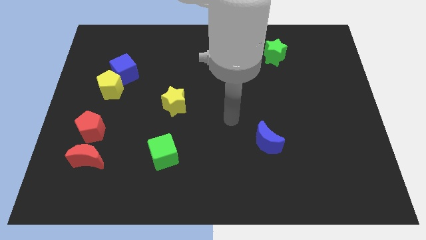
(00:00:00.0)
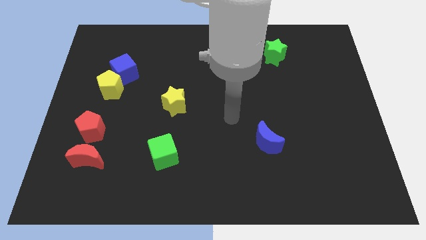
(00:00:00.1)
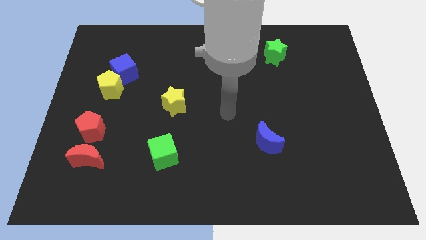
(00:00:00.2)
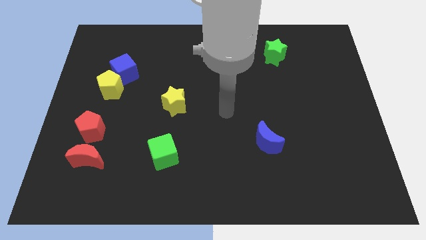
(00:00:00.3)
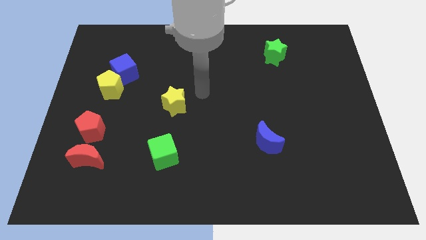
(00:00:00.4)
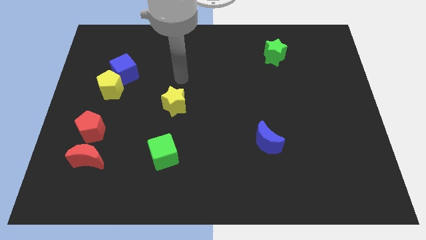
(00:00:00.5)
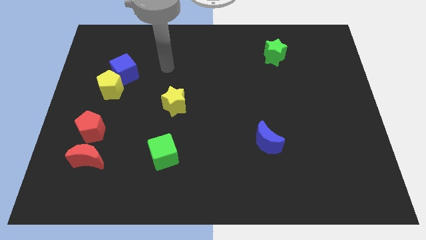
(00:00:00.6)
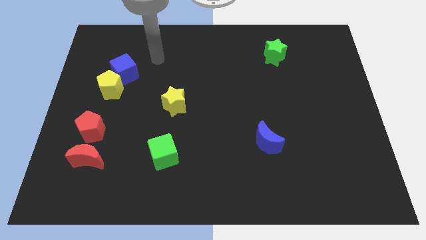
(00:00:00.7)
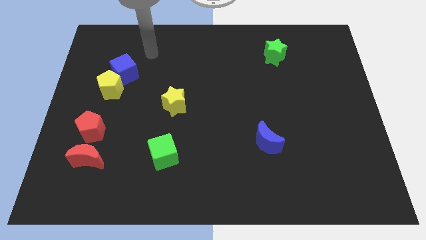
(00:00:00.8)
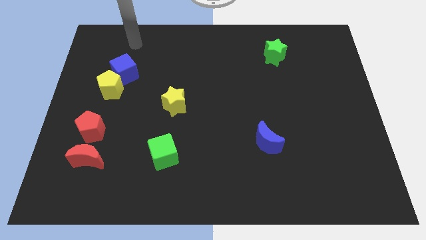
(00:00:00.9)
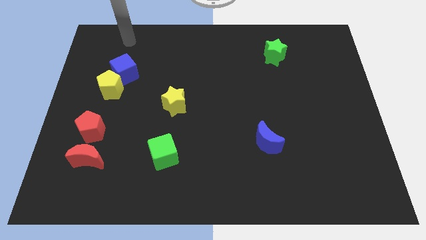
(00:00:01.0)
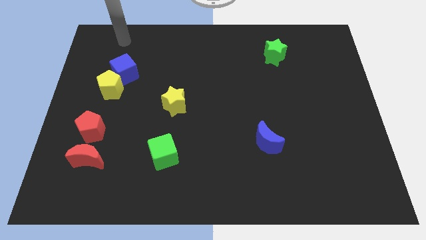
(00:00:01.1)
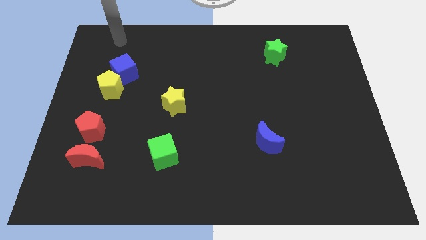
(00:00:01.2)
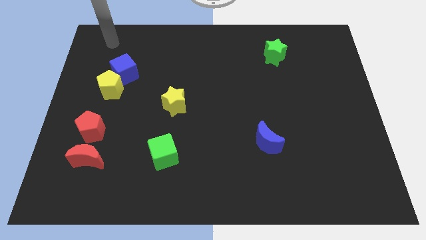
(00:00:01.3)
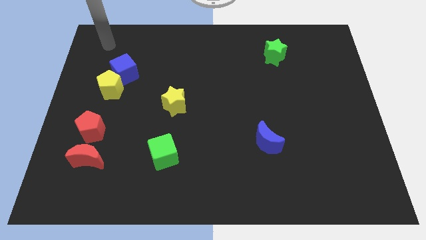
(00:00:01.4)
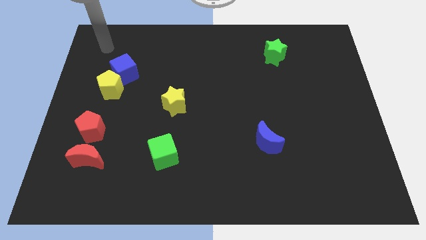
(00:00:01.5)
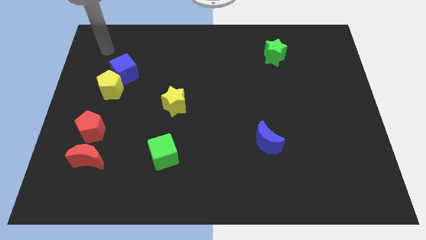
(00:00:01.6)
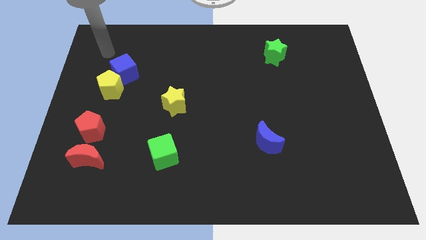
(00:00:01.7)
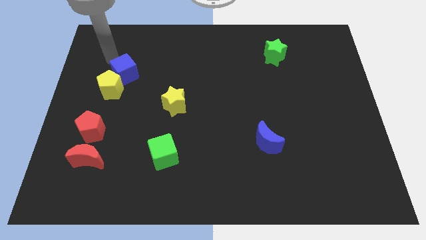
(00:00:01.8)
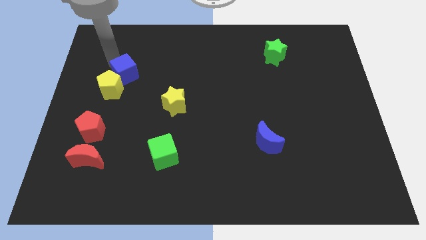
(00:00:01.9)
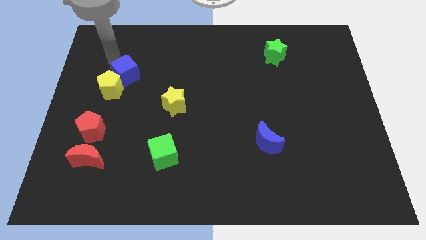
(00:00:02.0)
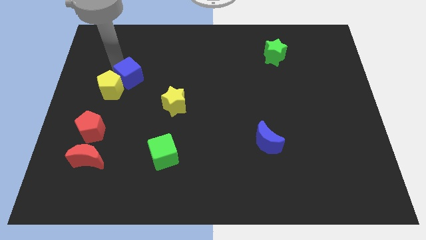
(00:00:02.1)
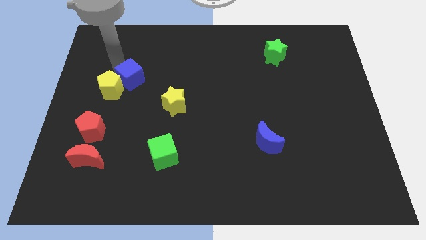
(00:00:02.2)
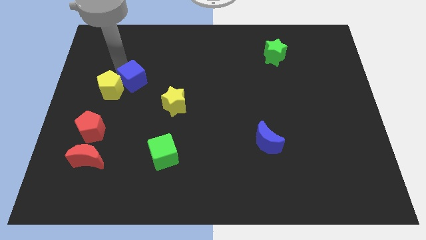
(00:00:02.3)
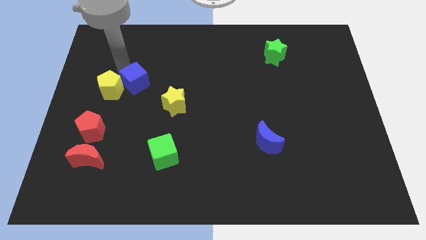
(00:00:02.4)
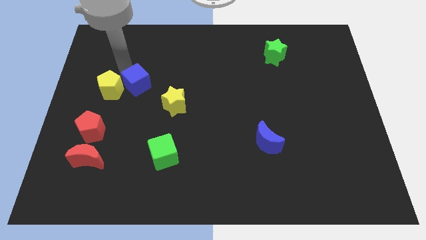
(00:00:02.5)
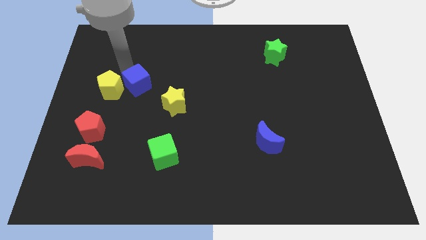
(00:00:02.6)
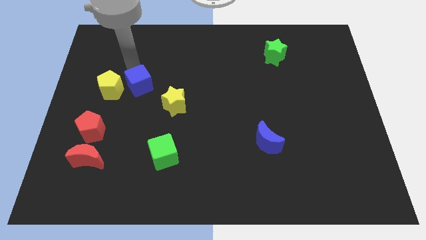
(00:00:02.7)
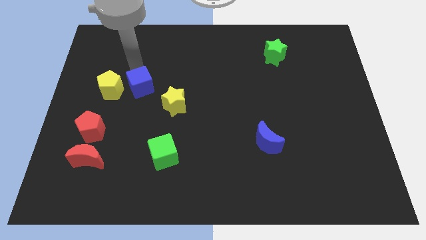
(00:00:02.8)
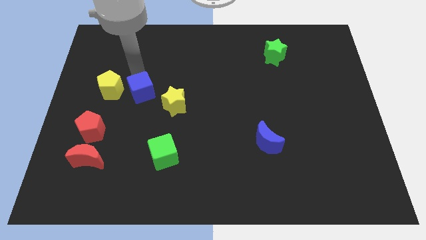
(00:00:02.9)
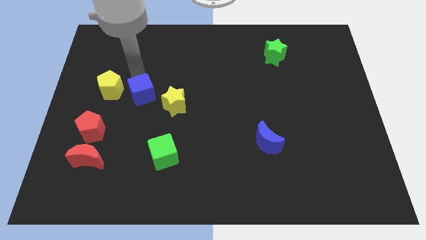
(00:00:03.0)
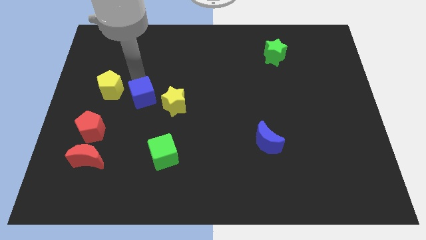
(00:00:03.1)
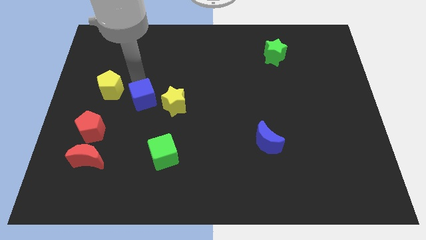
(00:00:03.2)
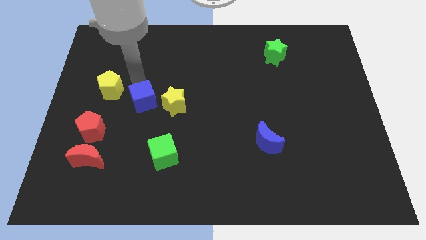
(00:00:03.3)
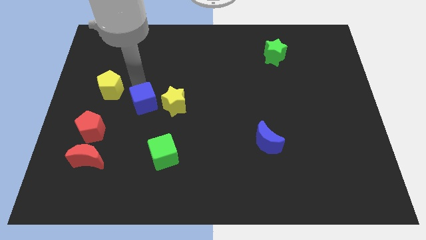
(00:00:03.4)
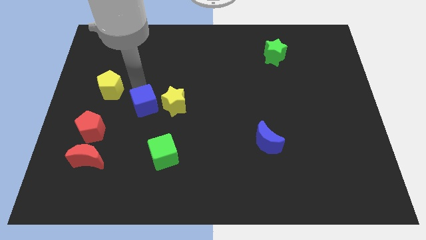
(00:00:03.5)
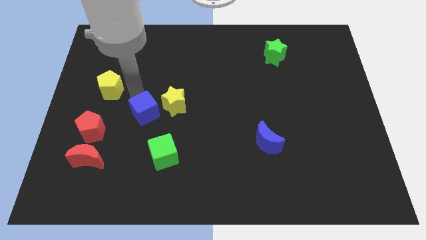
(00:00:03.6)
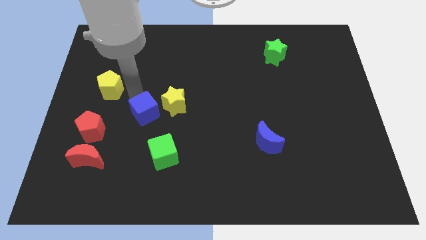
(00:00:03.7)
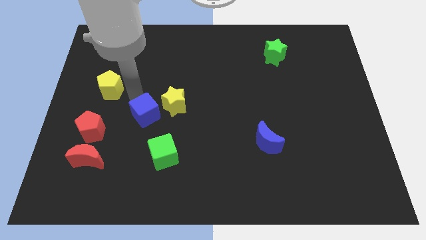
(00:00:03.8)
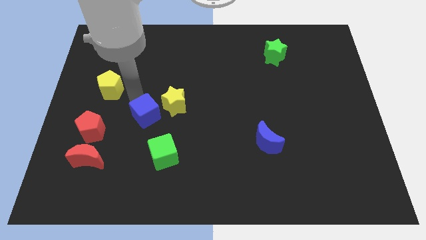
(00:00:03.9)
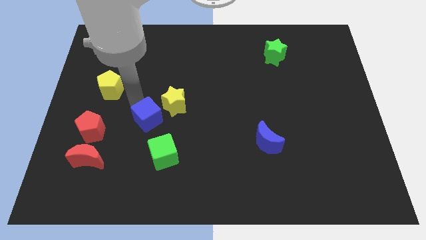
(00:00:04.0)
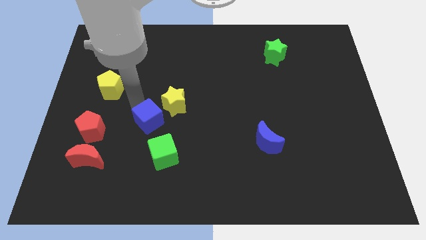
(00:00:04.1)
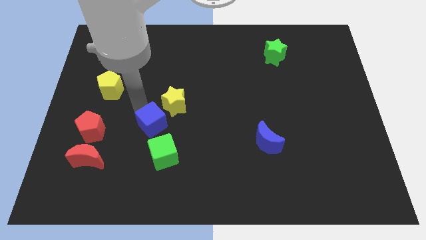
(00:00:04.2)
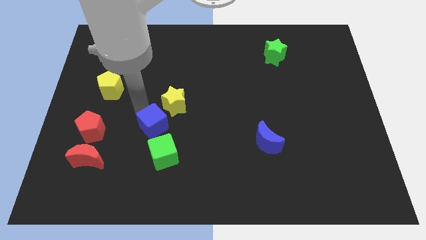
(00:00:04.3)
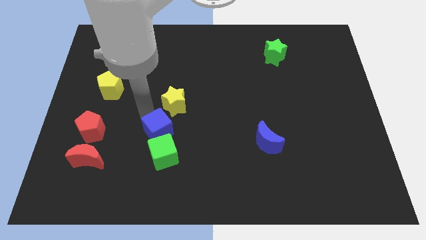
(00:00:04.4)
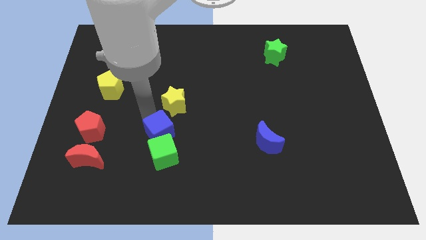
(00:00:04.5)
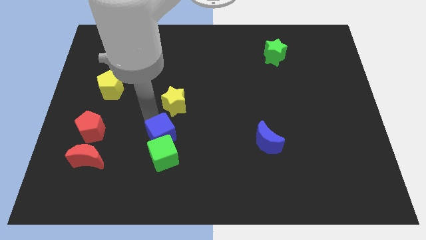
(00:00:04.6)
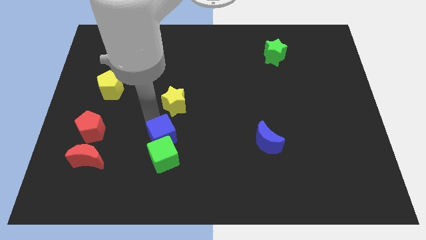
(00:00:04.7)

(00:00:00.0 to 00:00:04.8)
slide the blue cube to the green cube

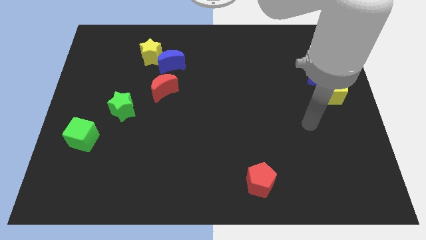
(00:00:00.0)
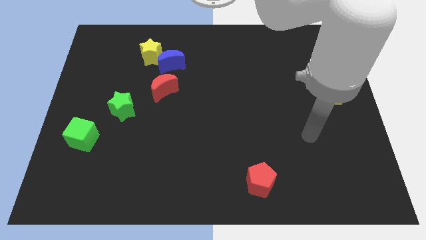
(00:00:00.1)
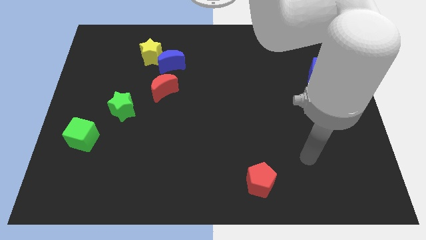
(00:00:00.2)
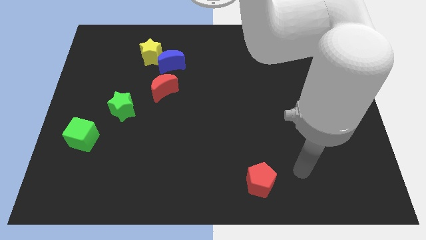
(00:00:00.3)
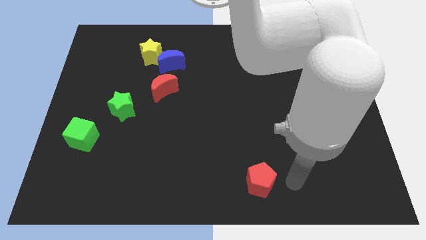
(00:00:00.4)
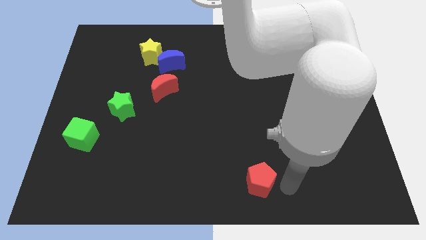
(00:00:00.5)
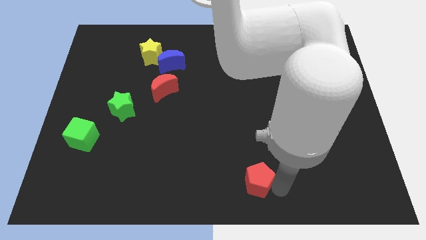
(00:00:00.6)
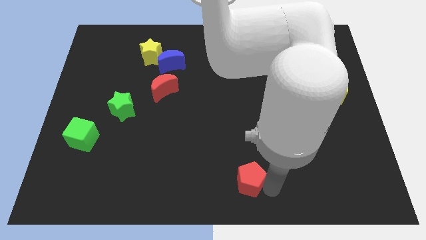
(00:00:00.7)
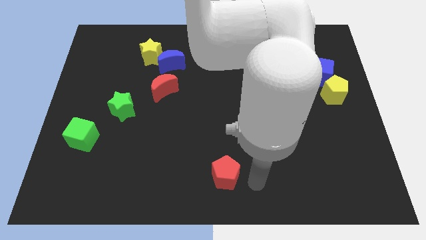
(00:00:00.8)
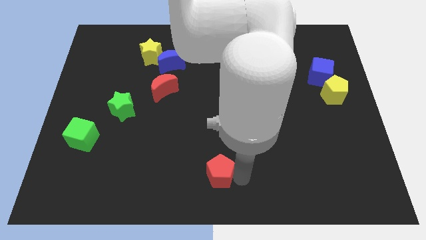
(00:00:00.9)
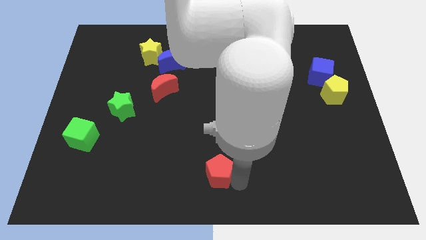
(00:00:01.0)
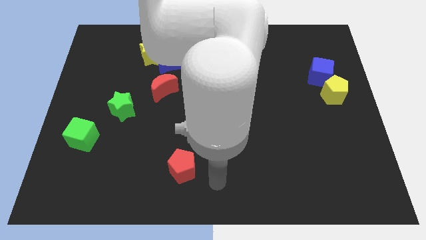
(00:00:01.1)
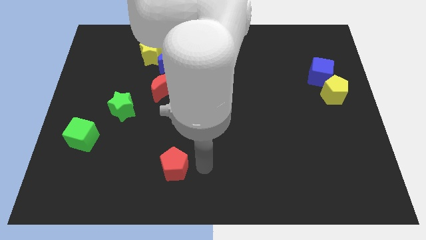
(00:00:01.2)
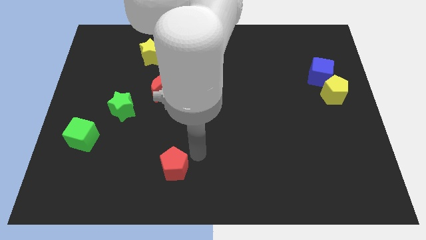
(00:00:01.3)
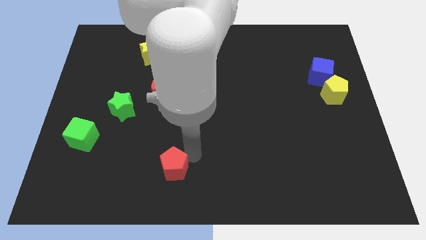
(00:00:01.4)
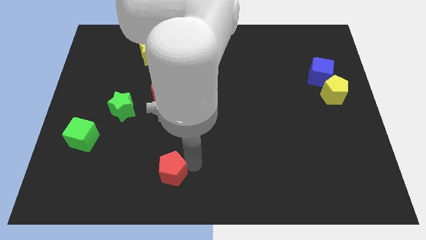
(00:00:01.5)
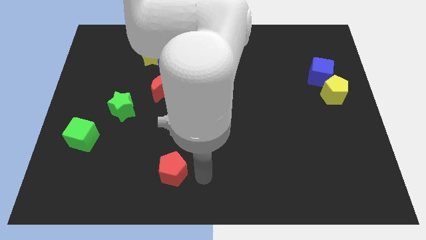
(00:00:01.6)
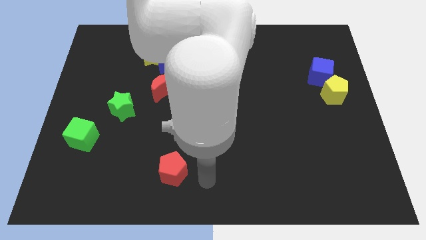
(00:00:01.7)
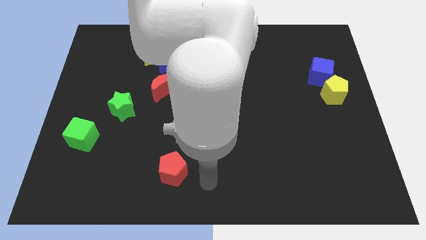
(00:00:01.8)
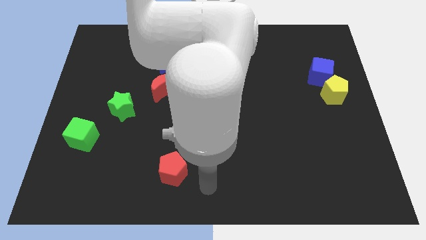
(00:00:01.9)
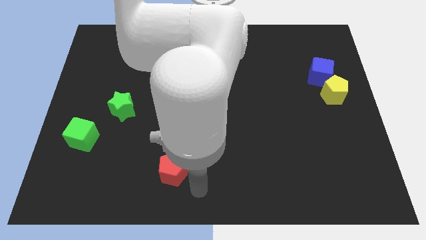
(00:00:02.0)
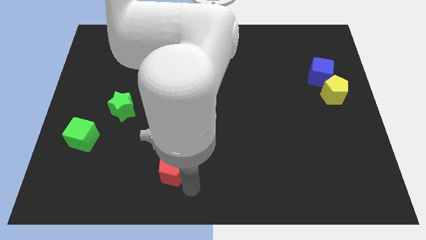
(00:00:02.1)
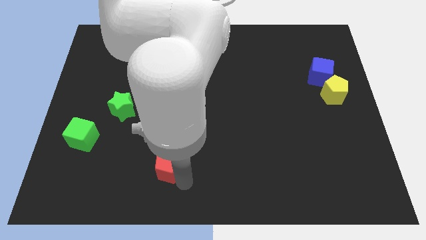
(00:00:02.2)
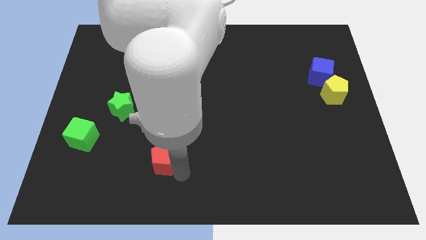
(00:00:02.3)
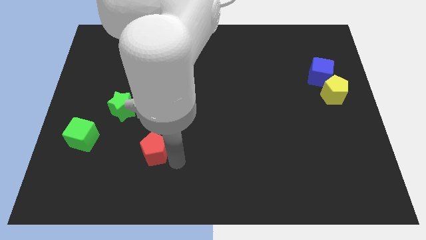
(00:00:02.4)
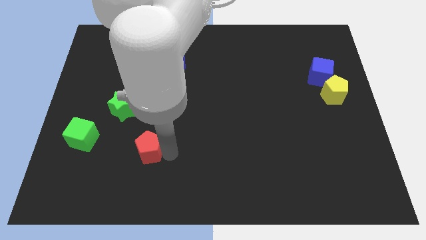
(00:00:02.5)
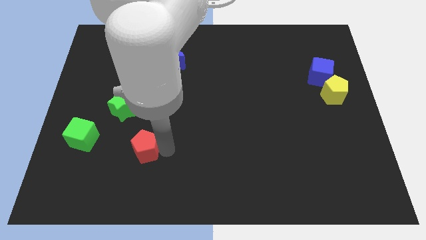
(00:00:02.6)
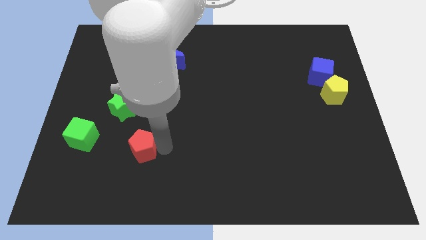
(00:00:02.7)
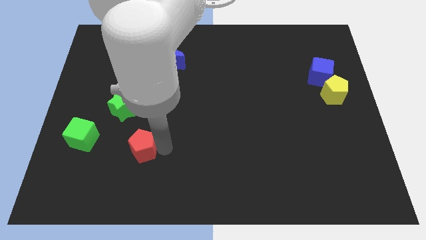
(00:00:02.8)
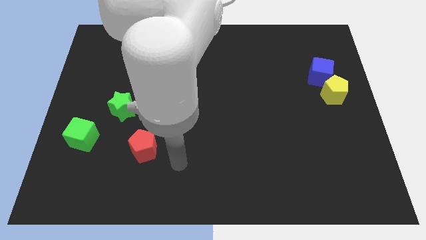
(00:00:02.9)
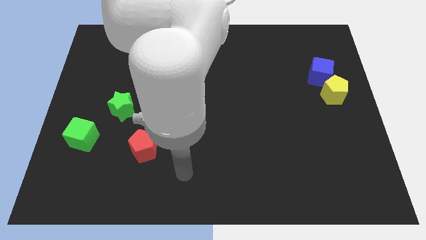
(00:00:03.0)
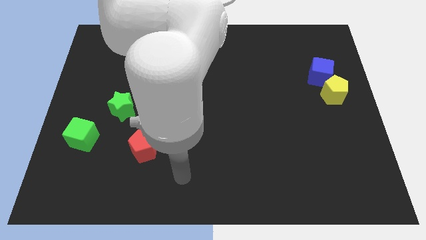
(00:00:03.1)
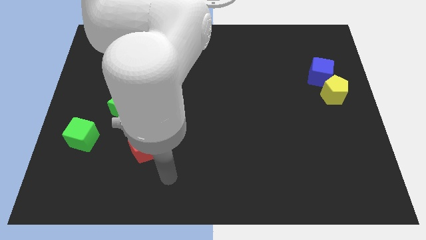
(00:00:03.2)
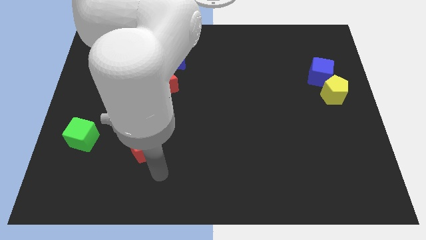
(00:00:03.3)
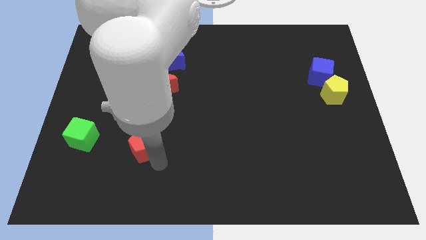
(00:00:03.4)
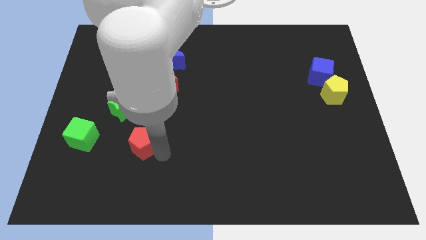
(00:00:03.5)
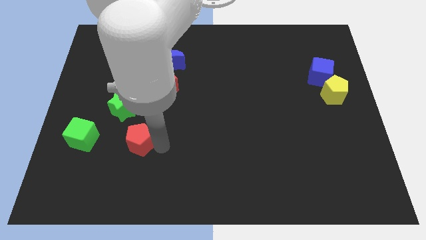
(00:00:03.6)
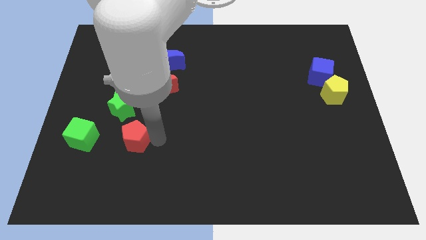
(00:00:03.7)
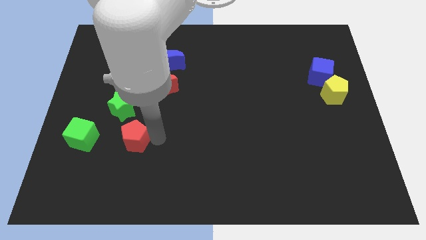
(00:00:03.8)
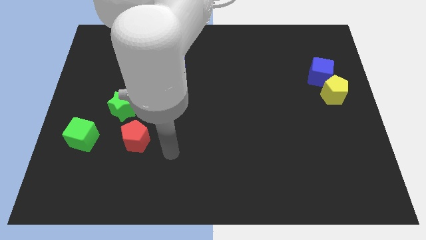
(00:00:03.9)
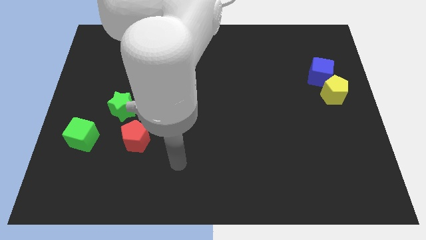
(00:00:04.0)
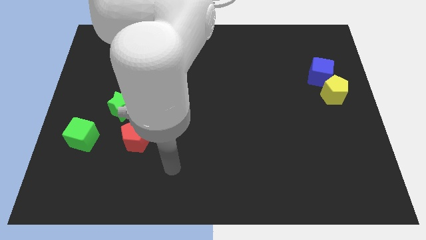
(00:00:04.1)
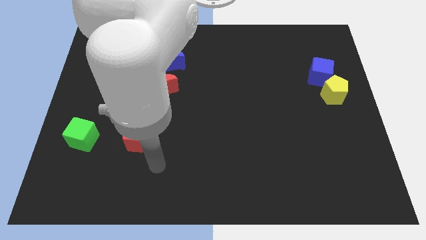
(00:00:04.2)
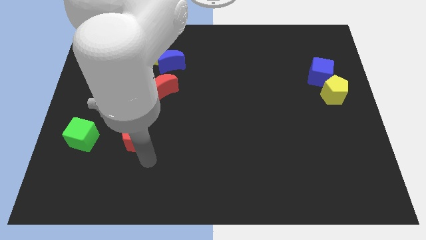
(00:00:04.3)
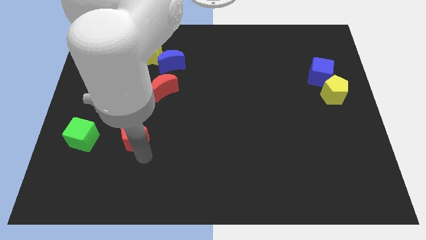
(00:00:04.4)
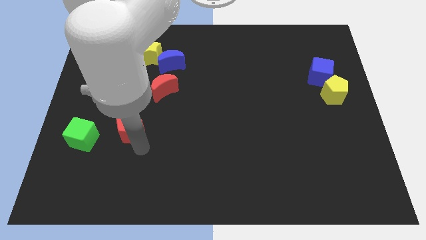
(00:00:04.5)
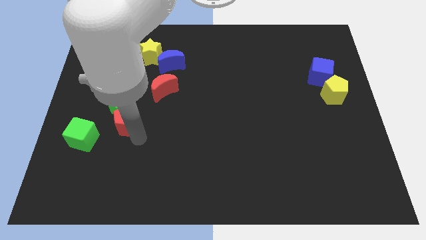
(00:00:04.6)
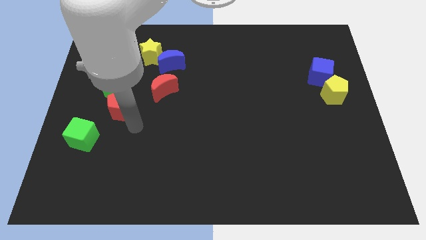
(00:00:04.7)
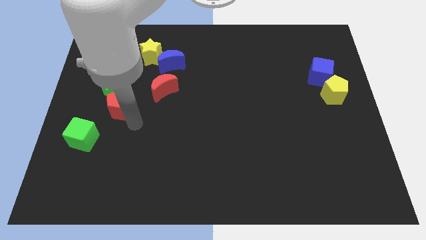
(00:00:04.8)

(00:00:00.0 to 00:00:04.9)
push the red pentagon next to the green star
